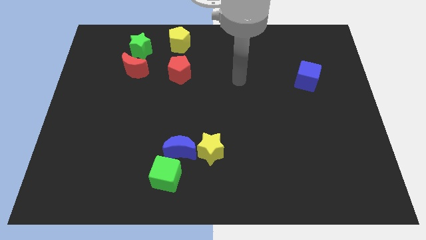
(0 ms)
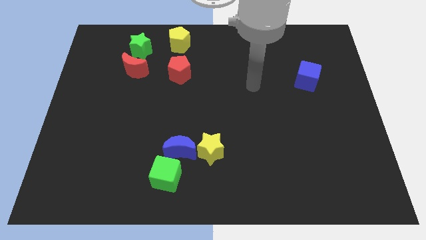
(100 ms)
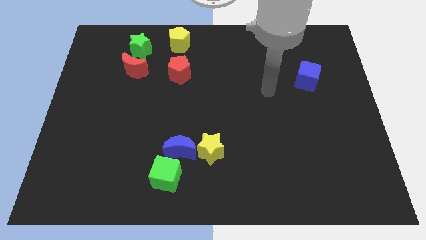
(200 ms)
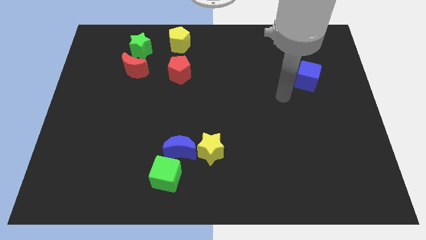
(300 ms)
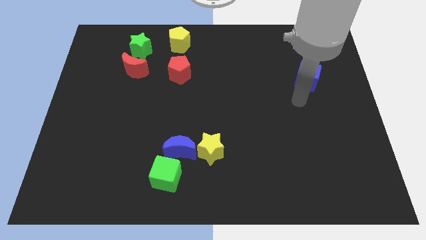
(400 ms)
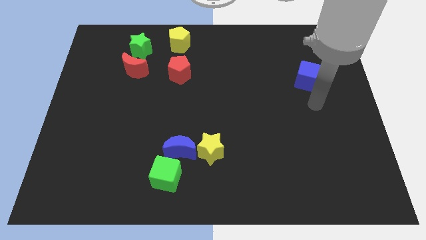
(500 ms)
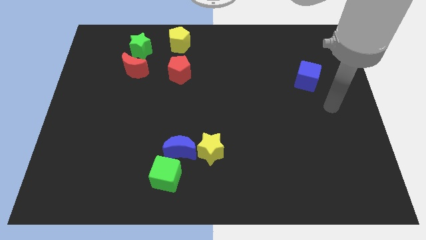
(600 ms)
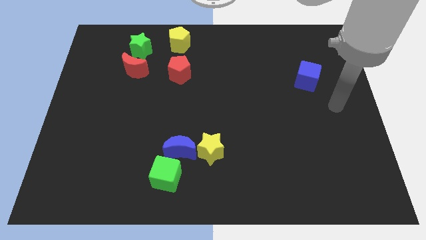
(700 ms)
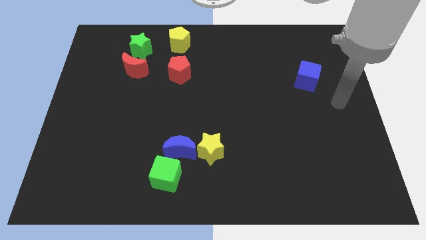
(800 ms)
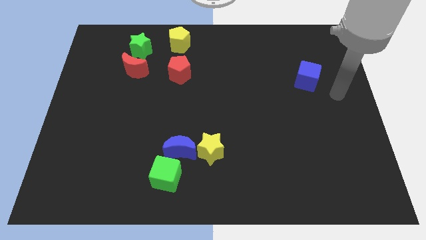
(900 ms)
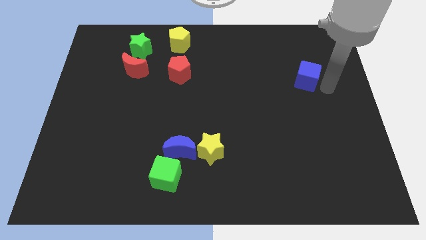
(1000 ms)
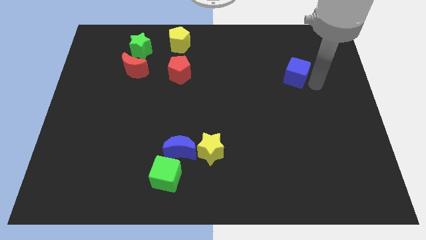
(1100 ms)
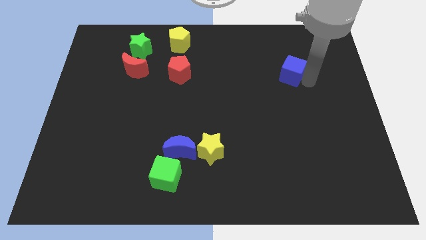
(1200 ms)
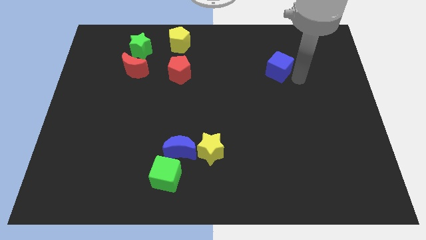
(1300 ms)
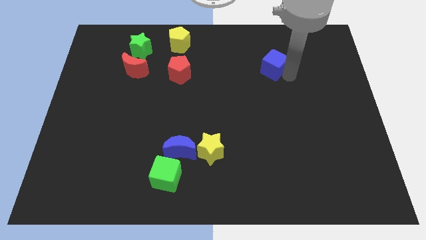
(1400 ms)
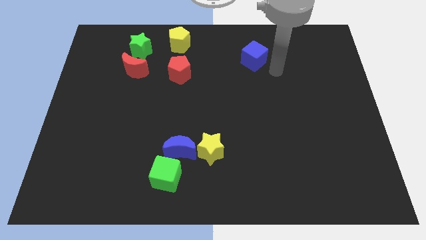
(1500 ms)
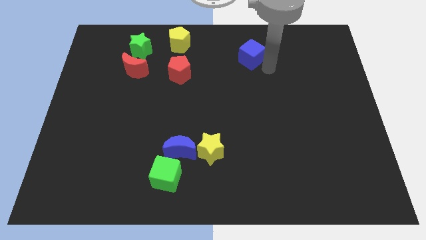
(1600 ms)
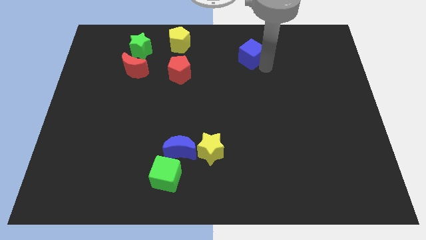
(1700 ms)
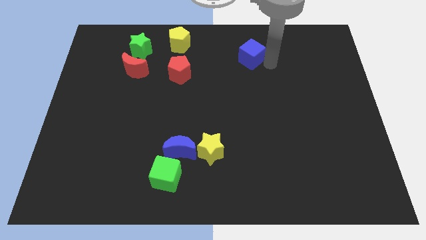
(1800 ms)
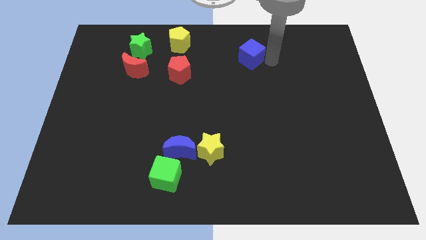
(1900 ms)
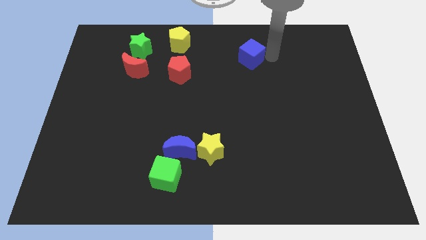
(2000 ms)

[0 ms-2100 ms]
move the blue cube towards top side

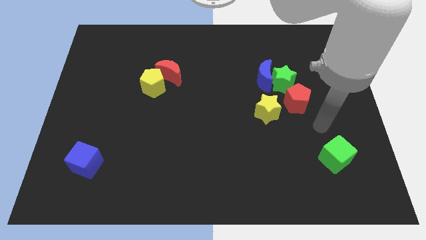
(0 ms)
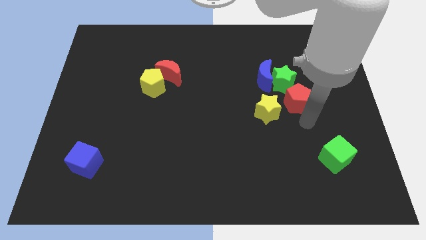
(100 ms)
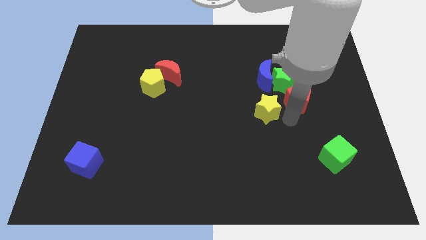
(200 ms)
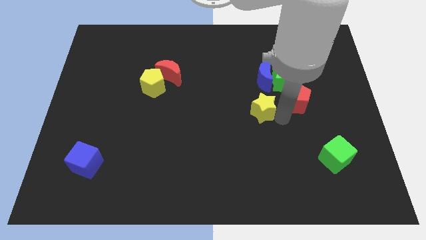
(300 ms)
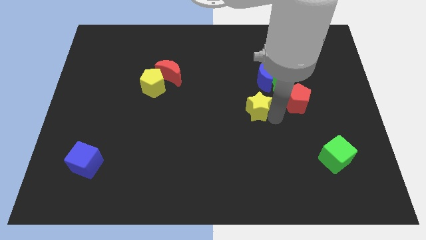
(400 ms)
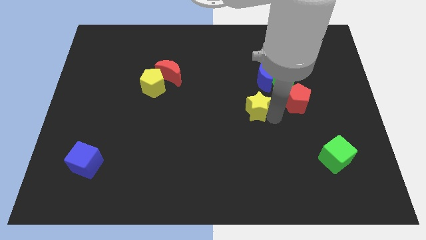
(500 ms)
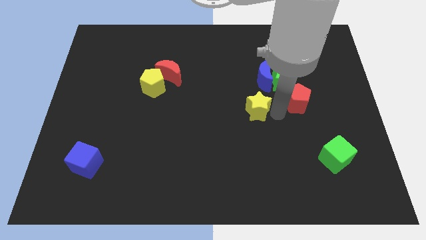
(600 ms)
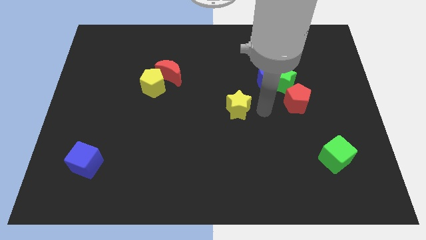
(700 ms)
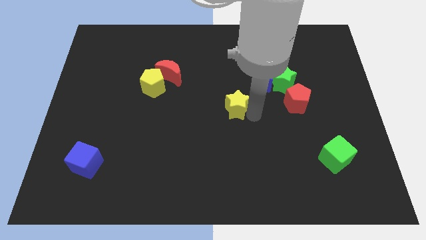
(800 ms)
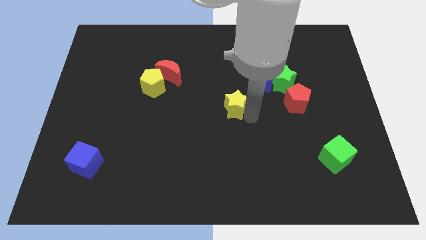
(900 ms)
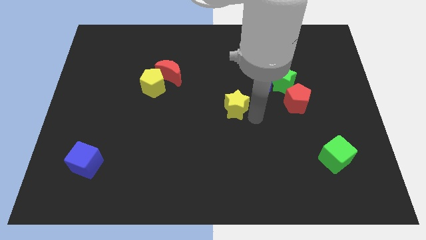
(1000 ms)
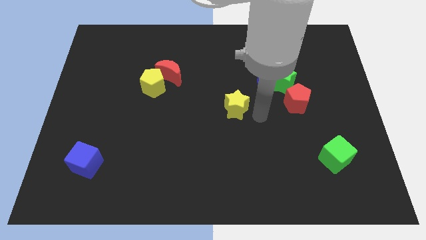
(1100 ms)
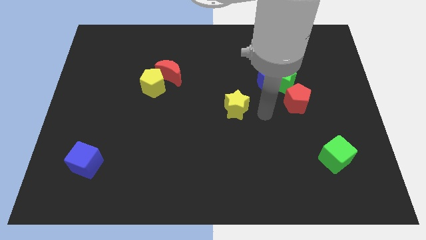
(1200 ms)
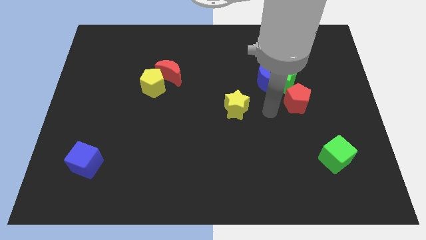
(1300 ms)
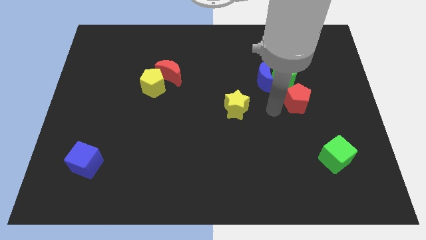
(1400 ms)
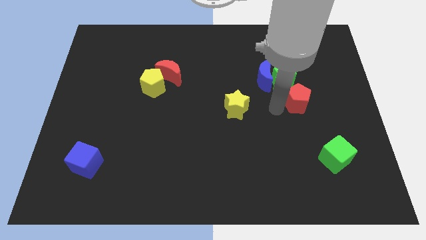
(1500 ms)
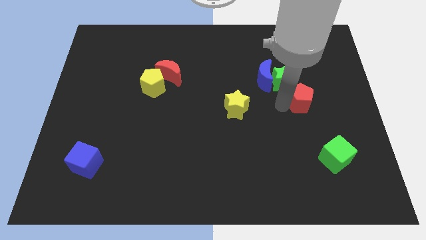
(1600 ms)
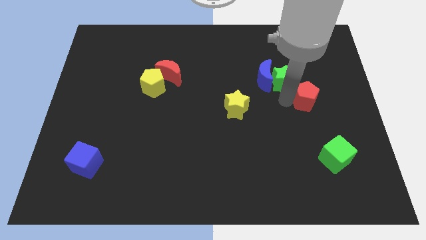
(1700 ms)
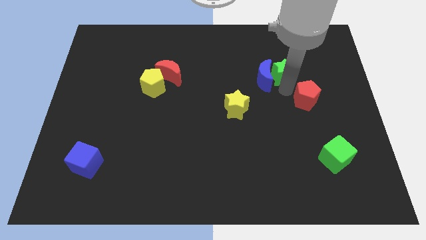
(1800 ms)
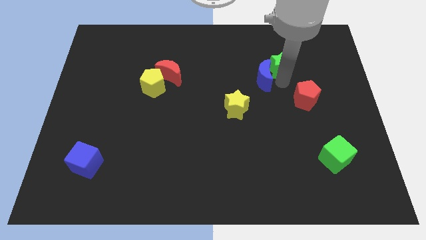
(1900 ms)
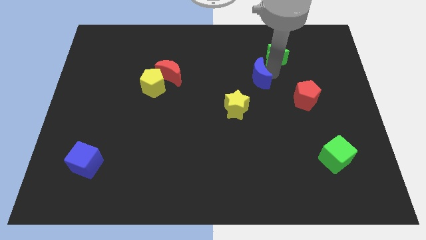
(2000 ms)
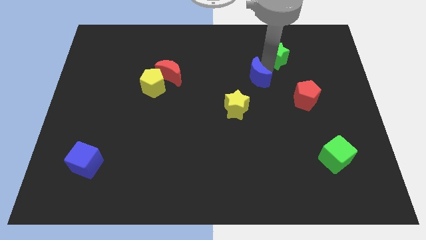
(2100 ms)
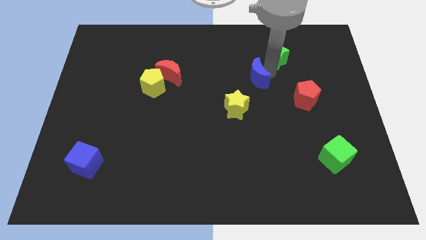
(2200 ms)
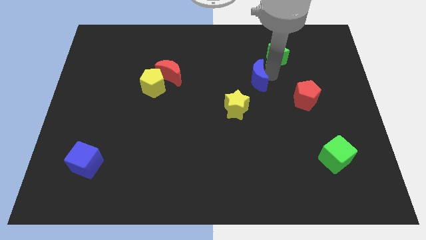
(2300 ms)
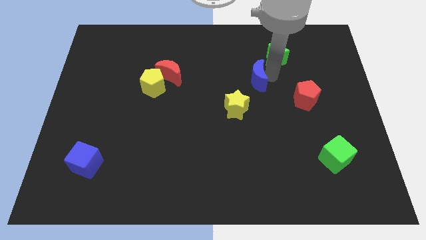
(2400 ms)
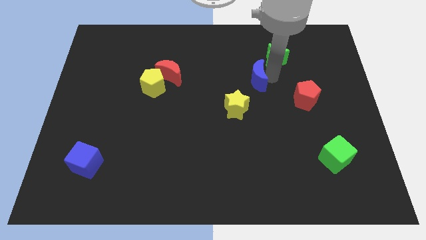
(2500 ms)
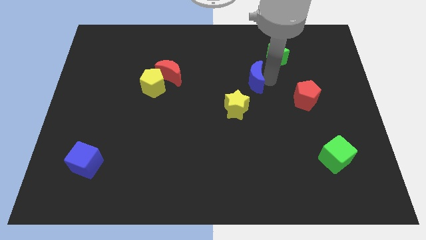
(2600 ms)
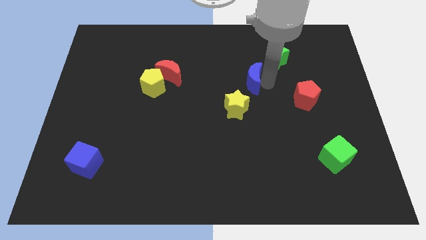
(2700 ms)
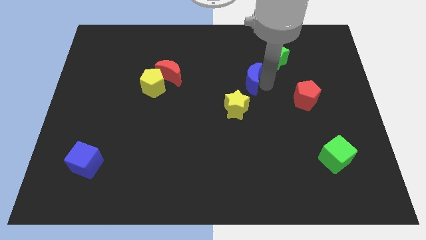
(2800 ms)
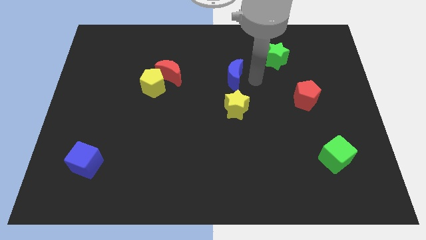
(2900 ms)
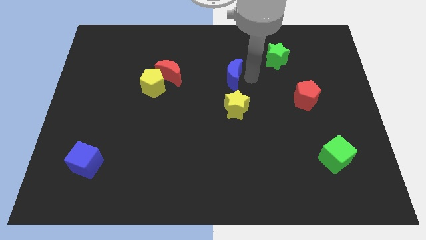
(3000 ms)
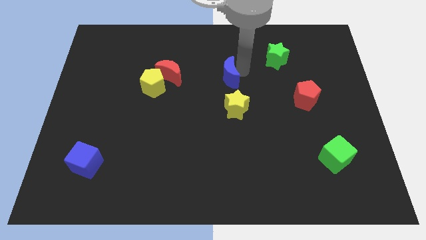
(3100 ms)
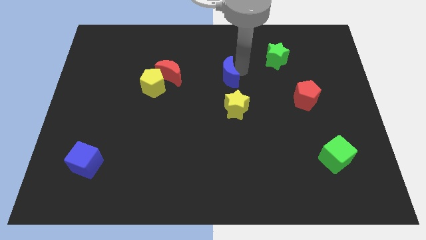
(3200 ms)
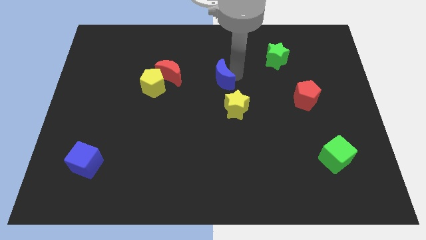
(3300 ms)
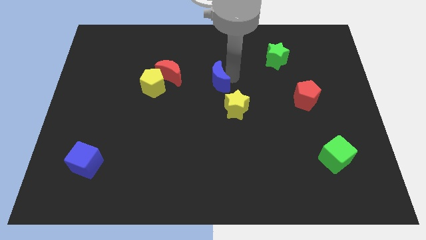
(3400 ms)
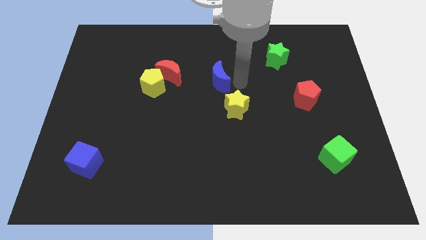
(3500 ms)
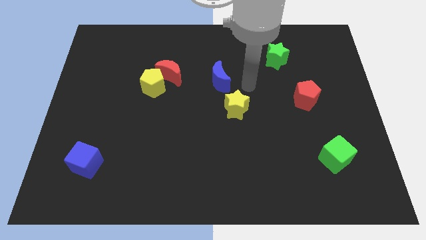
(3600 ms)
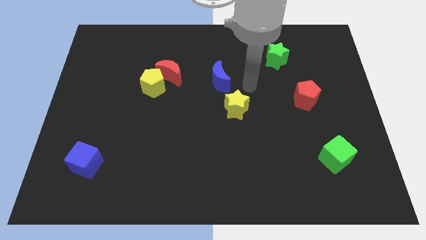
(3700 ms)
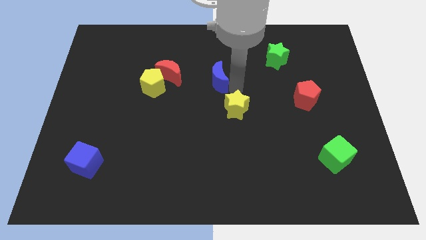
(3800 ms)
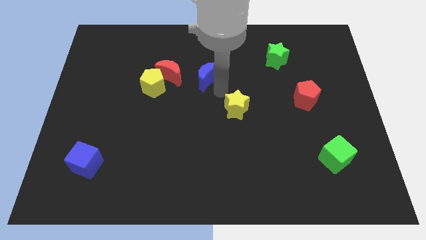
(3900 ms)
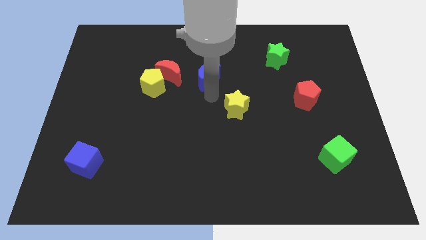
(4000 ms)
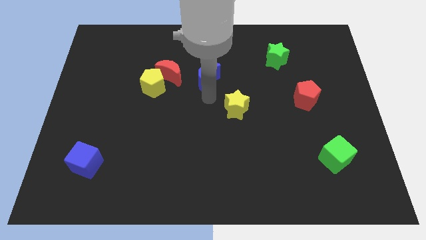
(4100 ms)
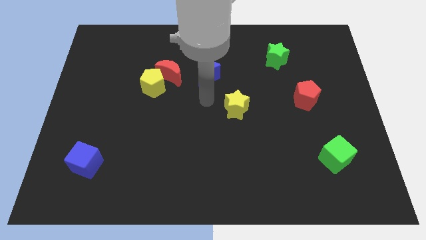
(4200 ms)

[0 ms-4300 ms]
arrange the yellow star blue moon and the green star to form a triangle

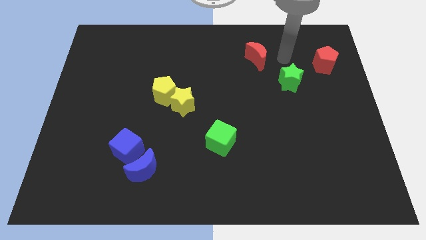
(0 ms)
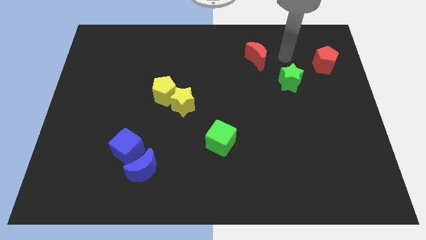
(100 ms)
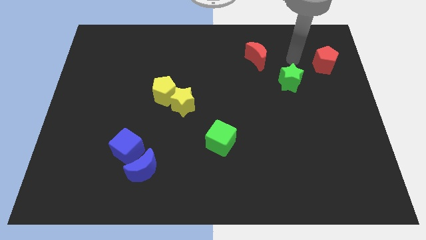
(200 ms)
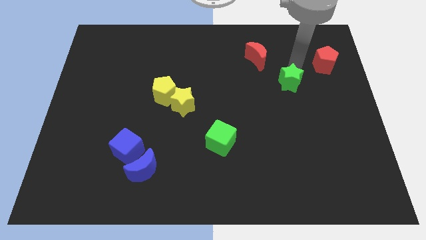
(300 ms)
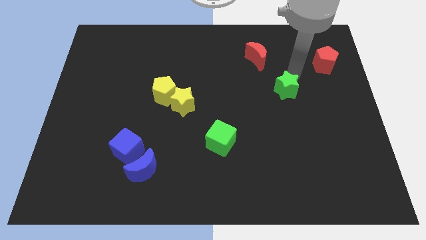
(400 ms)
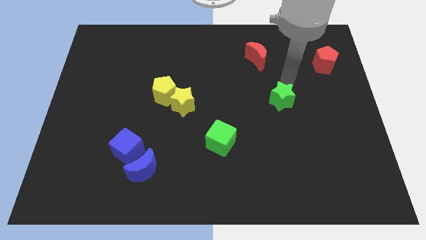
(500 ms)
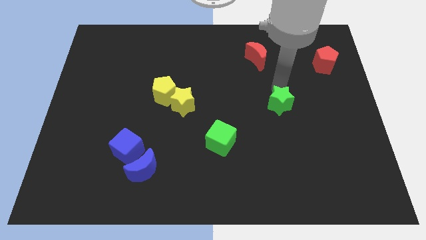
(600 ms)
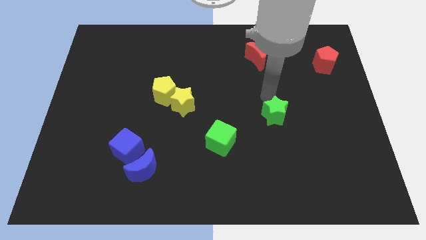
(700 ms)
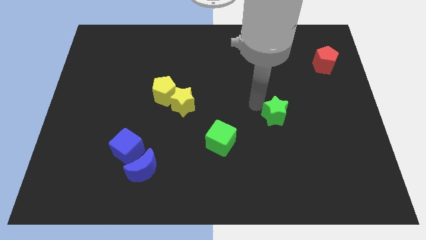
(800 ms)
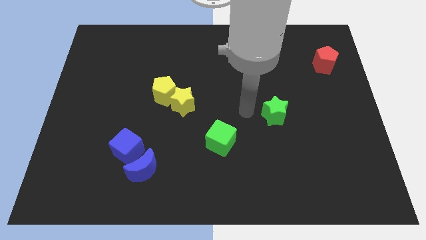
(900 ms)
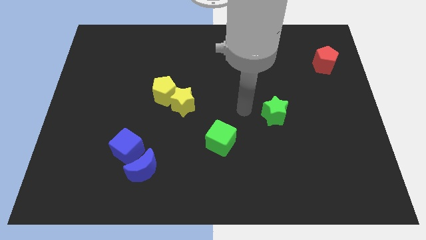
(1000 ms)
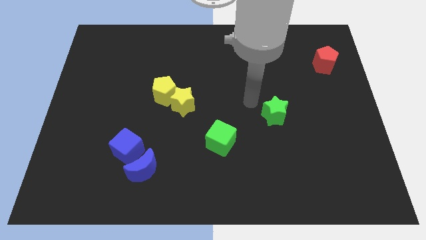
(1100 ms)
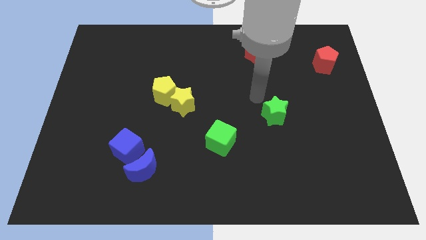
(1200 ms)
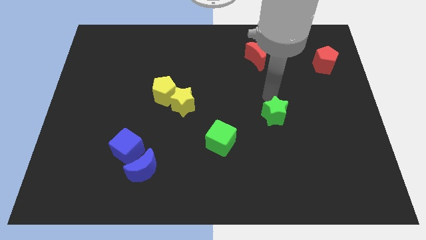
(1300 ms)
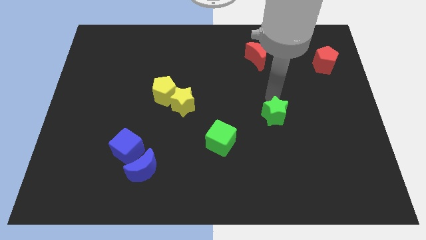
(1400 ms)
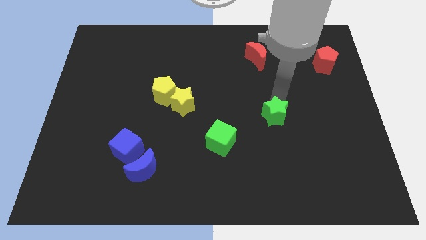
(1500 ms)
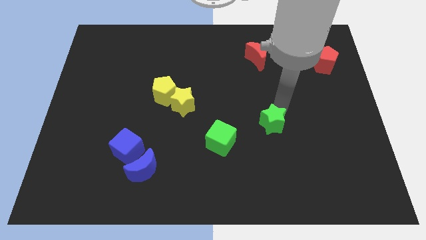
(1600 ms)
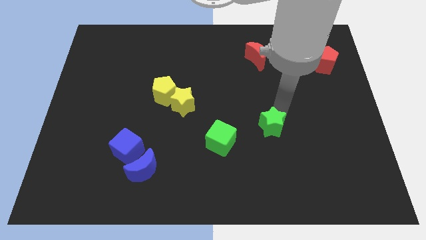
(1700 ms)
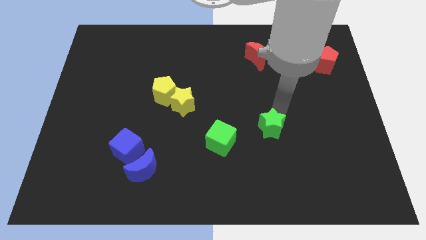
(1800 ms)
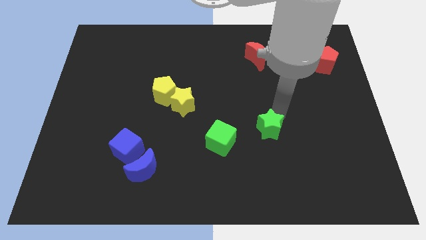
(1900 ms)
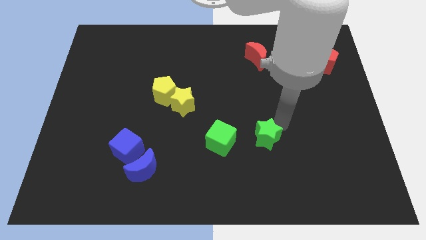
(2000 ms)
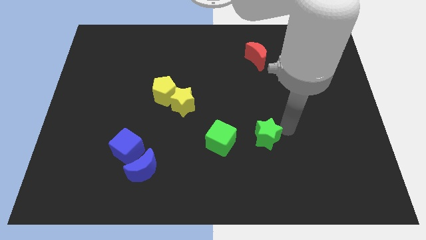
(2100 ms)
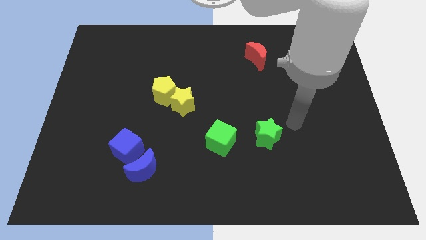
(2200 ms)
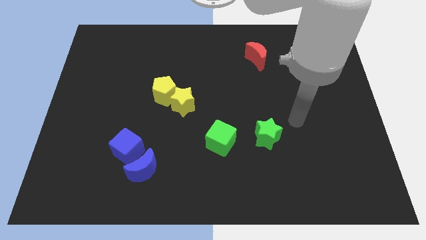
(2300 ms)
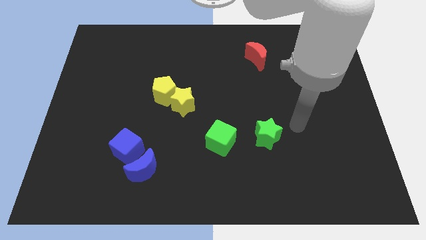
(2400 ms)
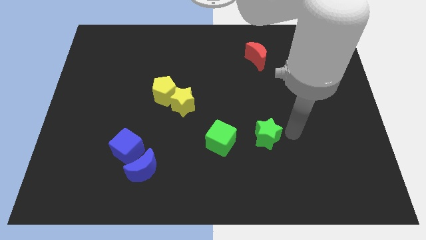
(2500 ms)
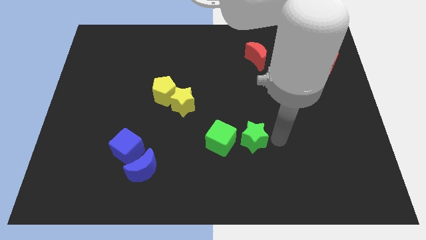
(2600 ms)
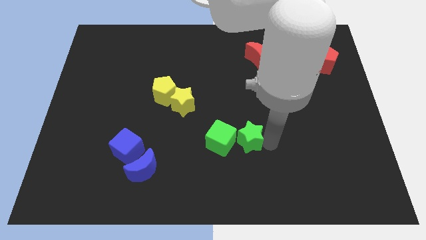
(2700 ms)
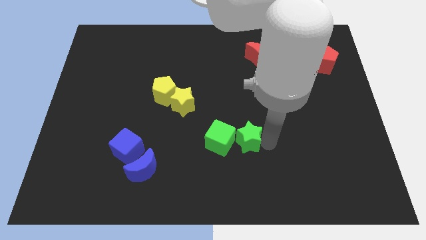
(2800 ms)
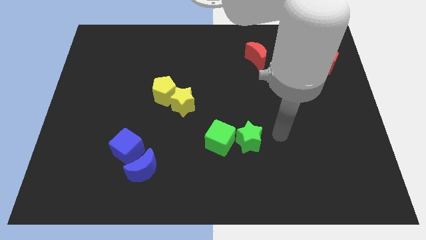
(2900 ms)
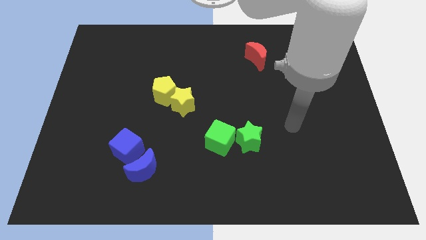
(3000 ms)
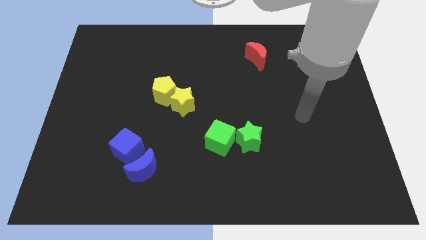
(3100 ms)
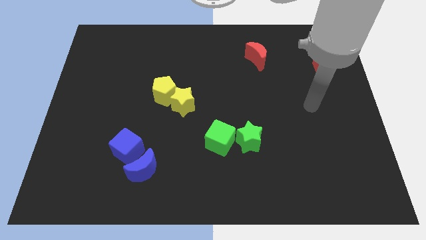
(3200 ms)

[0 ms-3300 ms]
move the green star to the right of cube
